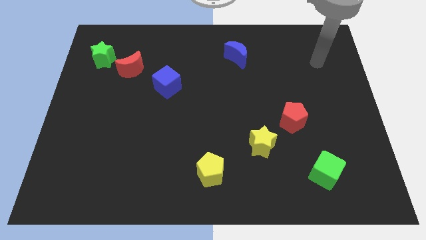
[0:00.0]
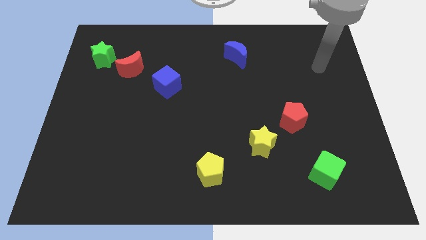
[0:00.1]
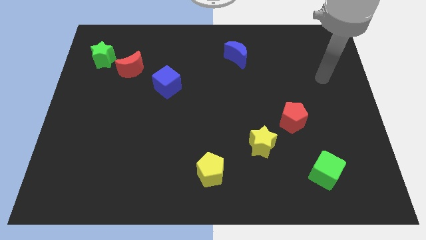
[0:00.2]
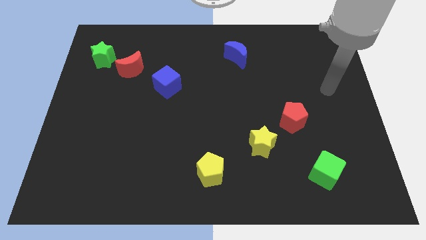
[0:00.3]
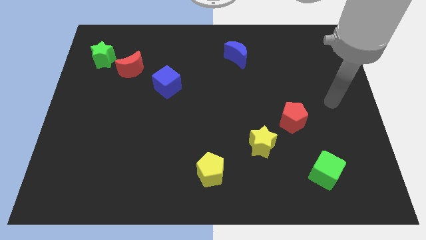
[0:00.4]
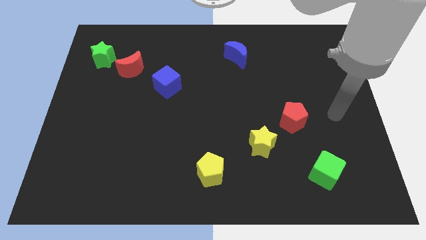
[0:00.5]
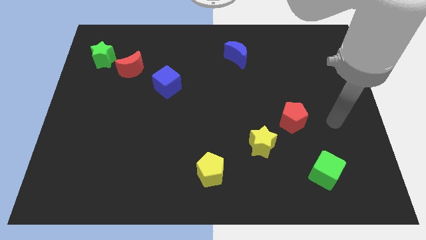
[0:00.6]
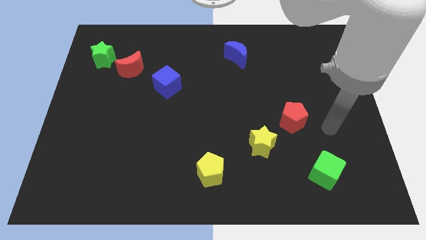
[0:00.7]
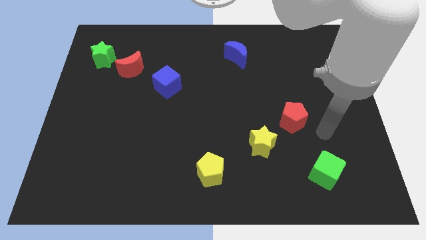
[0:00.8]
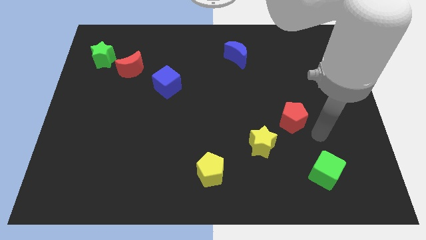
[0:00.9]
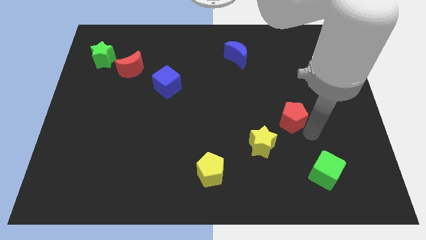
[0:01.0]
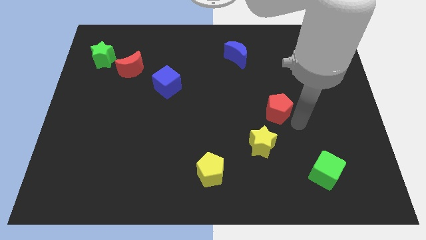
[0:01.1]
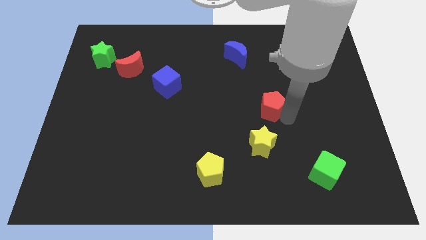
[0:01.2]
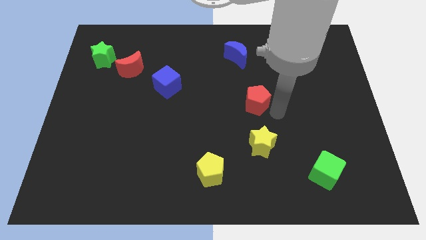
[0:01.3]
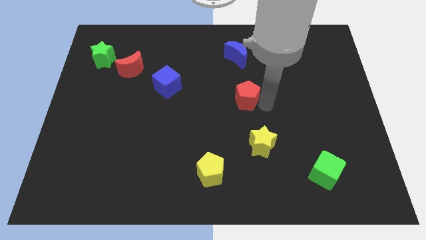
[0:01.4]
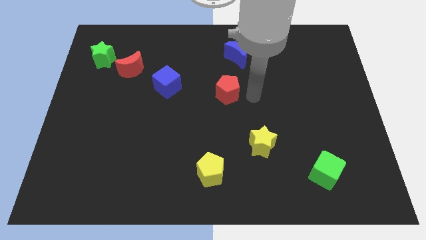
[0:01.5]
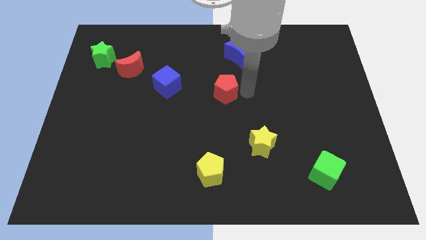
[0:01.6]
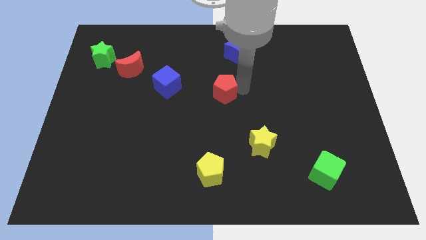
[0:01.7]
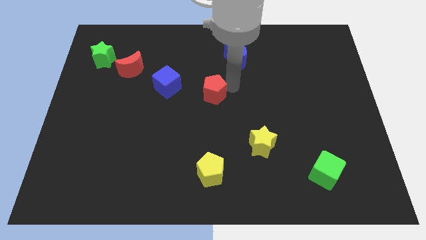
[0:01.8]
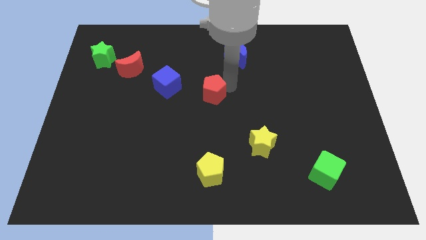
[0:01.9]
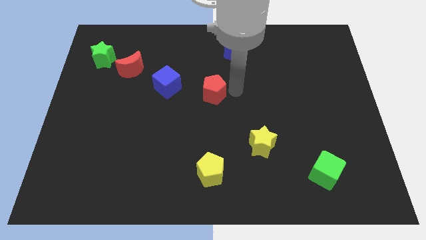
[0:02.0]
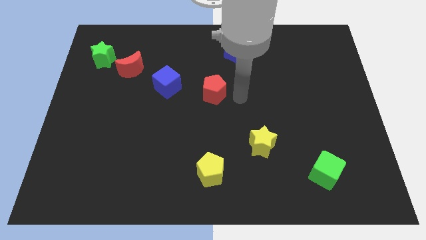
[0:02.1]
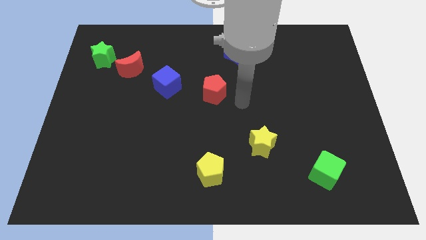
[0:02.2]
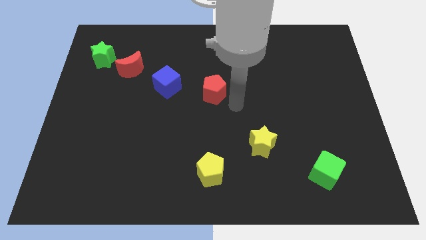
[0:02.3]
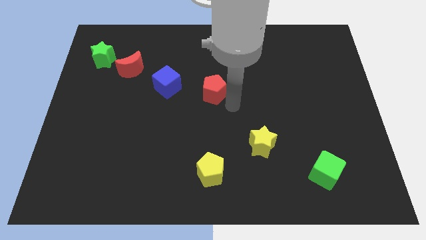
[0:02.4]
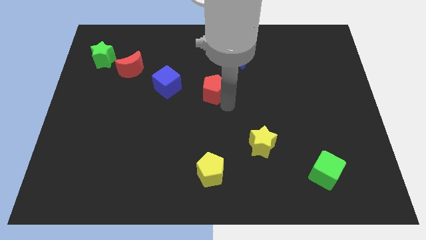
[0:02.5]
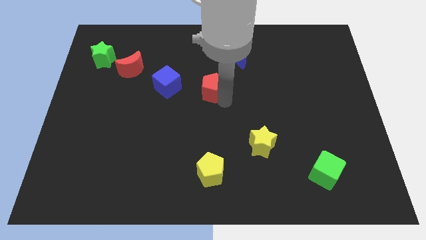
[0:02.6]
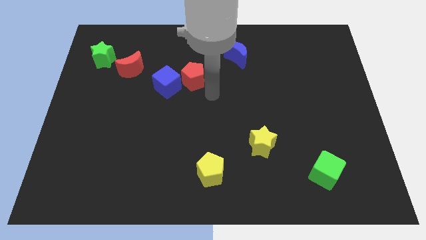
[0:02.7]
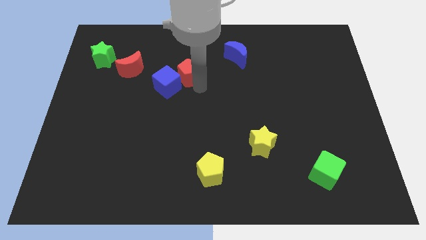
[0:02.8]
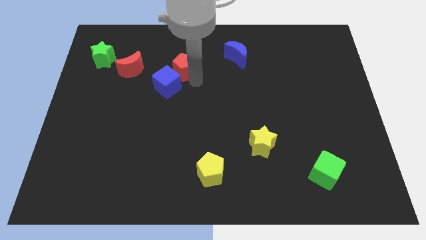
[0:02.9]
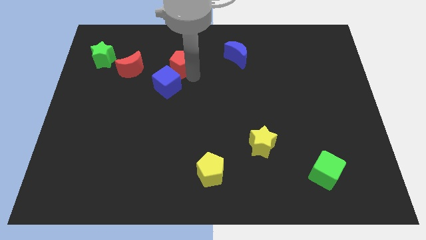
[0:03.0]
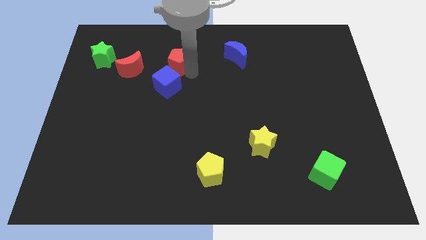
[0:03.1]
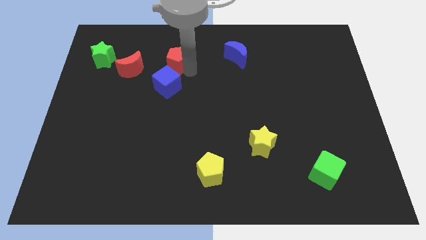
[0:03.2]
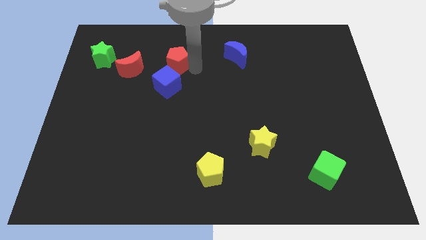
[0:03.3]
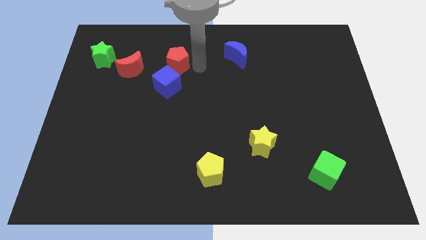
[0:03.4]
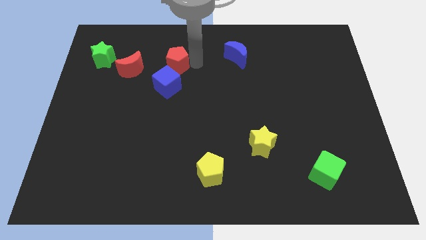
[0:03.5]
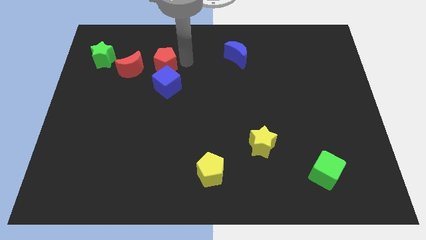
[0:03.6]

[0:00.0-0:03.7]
slide the red pentagon parallel right to the red moon

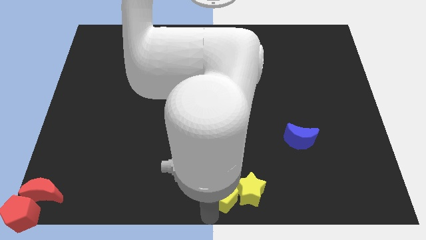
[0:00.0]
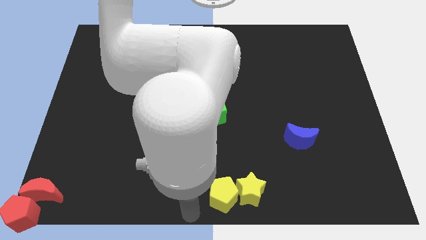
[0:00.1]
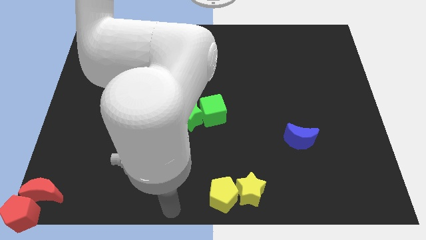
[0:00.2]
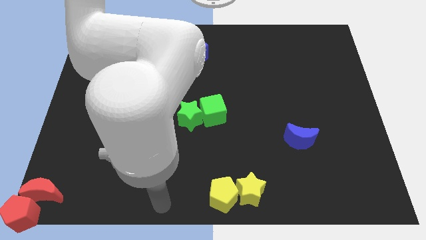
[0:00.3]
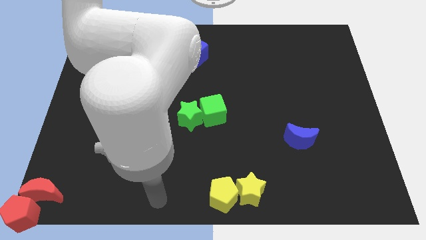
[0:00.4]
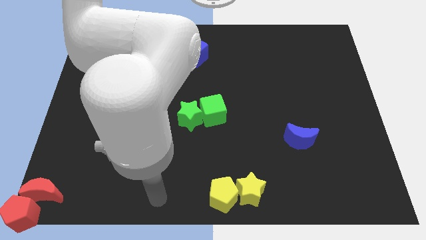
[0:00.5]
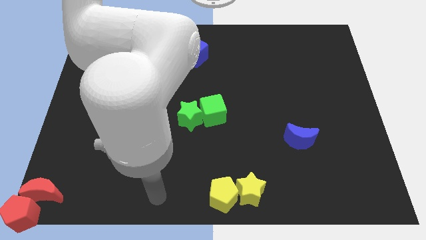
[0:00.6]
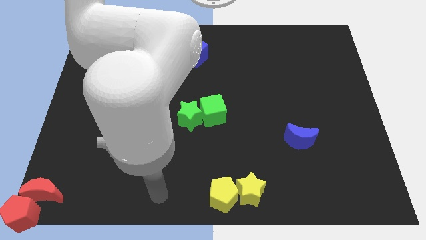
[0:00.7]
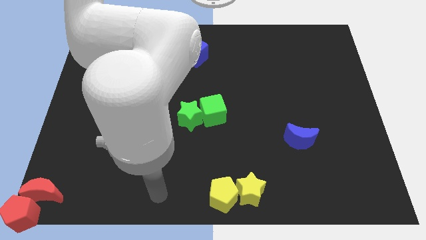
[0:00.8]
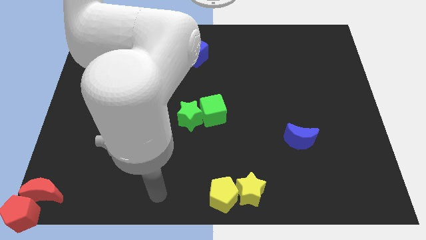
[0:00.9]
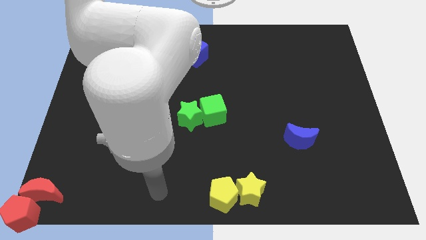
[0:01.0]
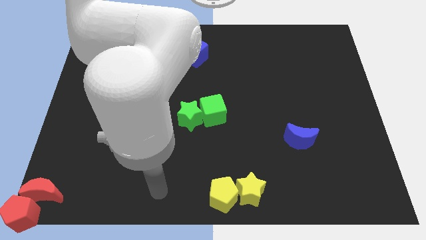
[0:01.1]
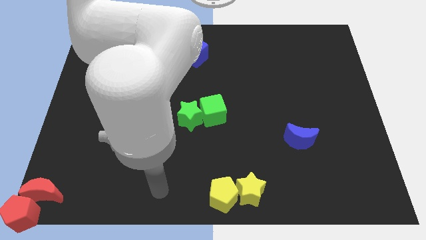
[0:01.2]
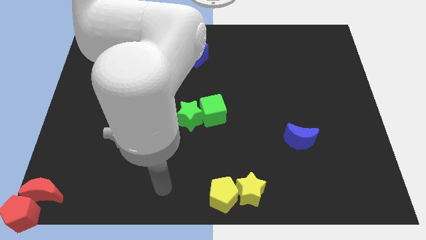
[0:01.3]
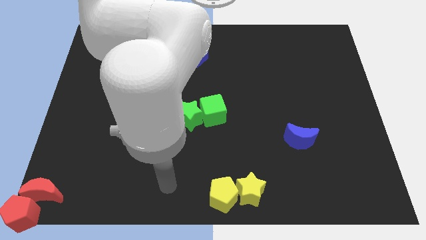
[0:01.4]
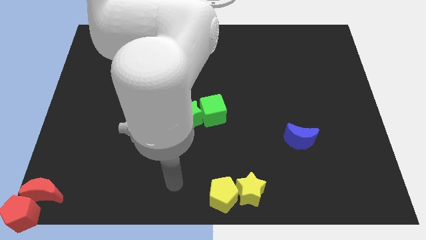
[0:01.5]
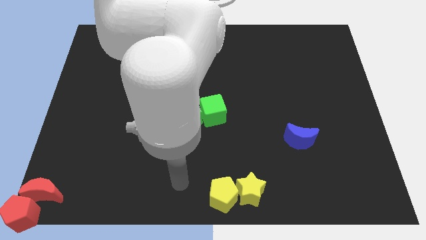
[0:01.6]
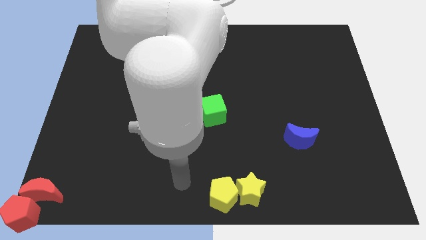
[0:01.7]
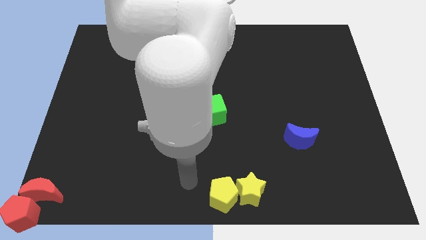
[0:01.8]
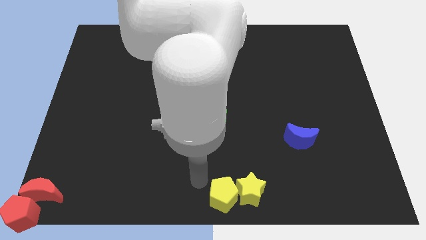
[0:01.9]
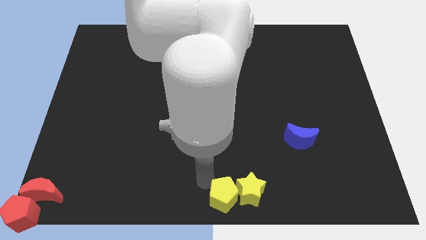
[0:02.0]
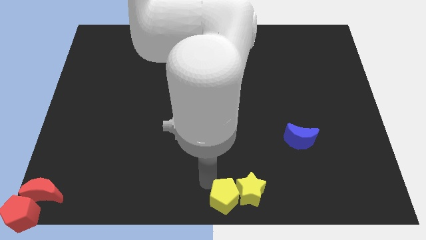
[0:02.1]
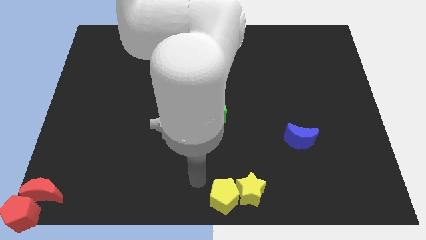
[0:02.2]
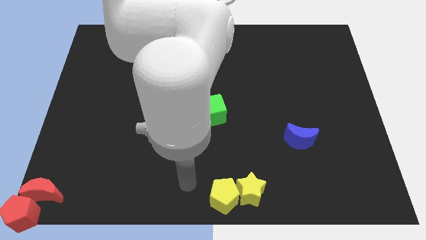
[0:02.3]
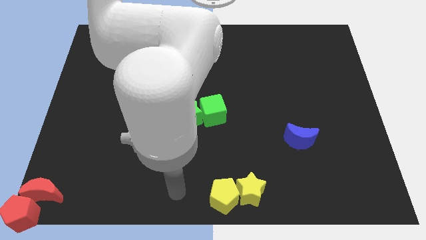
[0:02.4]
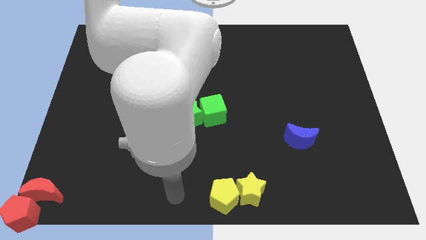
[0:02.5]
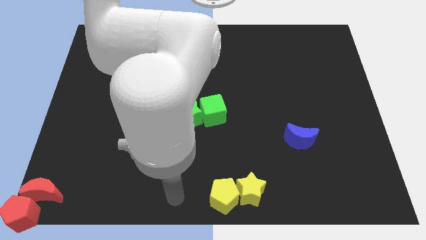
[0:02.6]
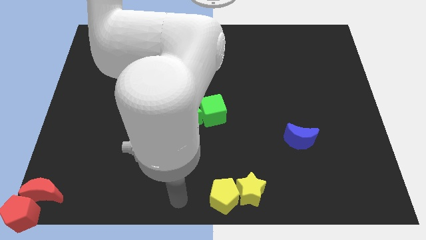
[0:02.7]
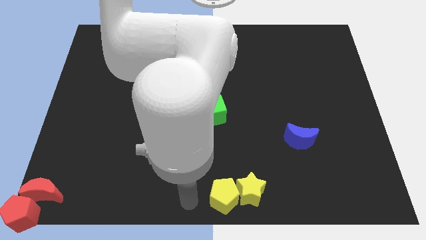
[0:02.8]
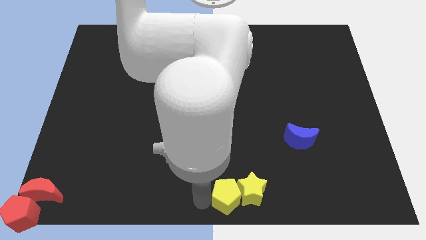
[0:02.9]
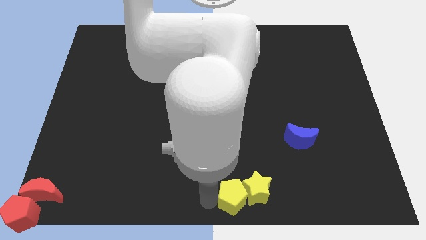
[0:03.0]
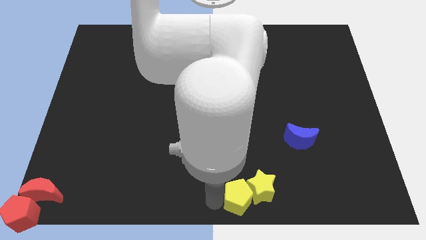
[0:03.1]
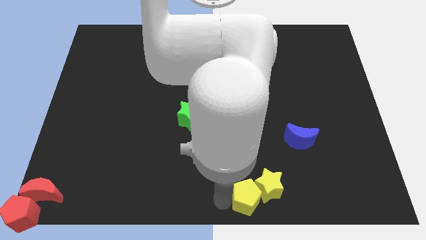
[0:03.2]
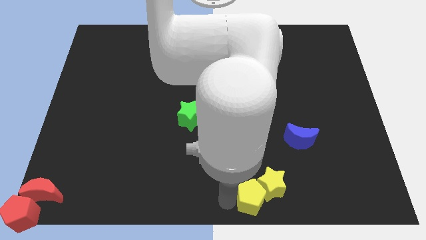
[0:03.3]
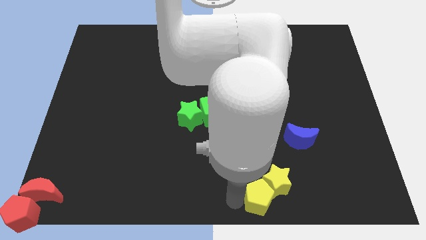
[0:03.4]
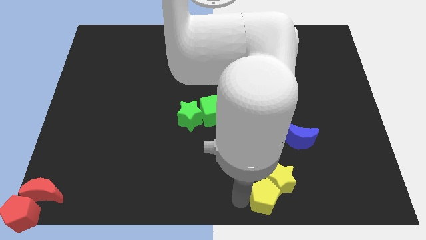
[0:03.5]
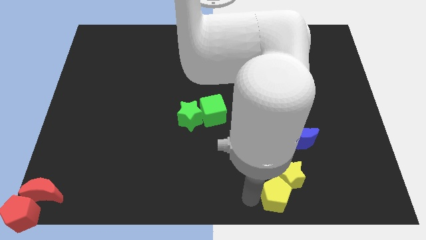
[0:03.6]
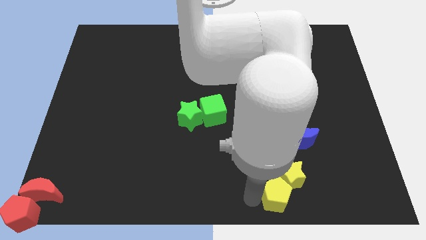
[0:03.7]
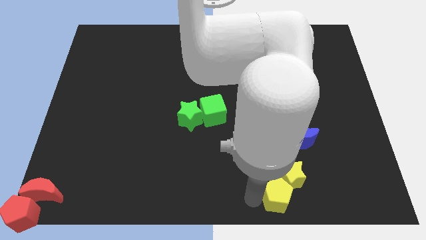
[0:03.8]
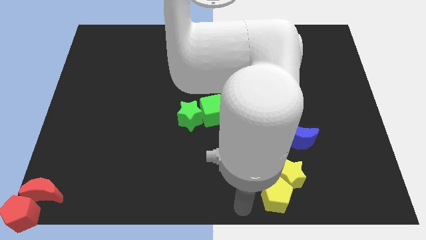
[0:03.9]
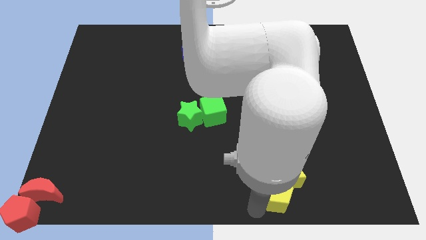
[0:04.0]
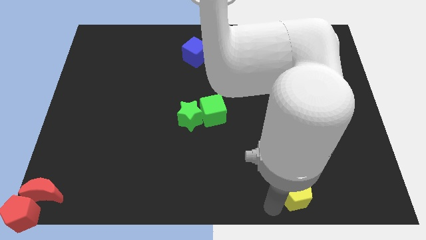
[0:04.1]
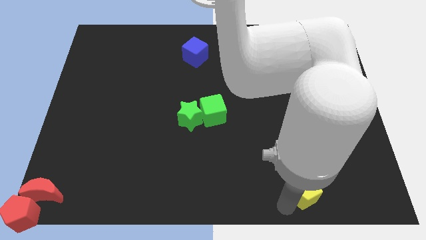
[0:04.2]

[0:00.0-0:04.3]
push the yellow blocks below the blue moon

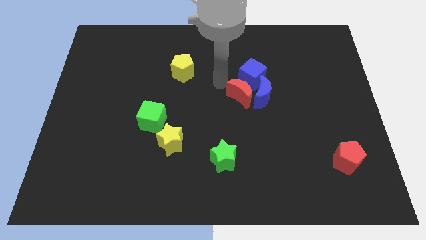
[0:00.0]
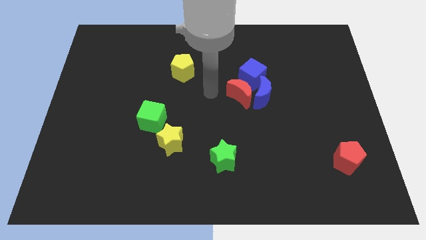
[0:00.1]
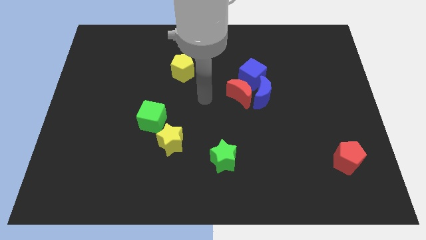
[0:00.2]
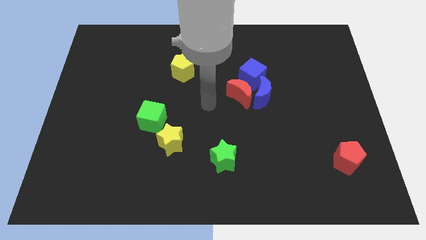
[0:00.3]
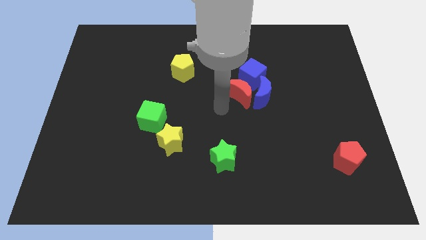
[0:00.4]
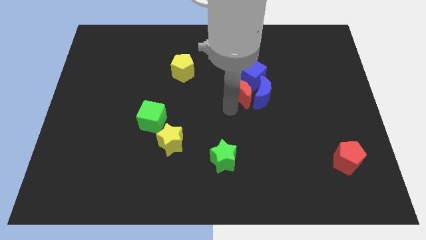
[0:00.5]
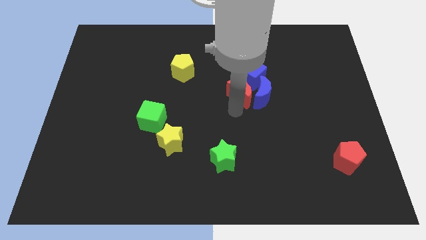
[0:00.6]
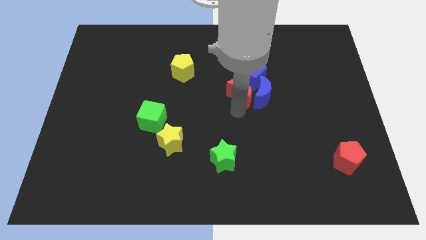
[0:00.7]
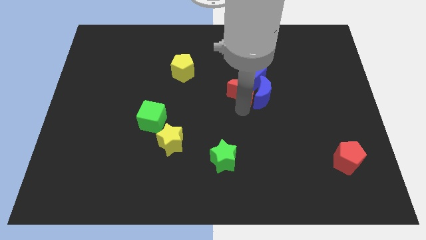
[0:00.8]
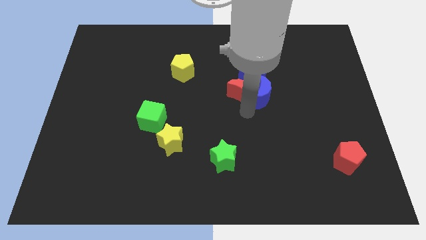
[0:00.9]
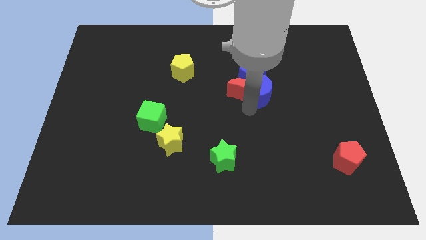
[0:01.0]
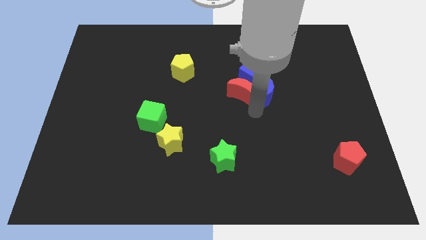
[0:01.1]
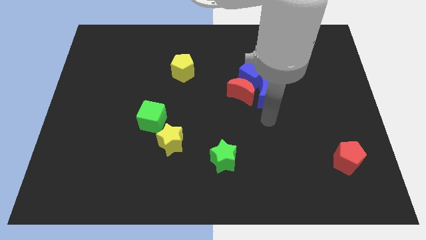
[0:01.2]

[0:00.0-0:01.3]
adjust the crescents below the blue cube
